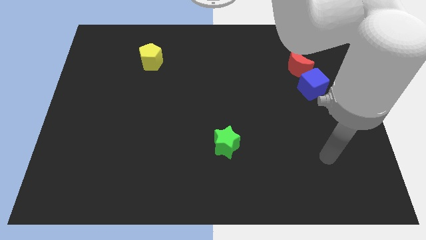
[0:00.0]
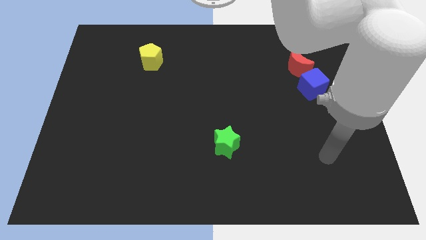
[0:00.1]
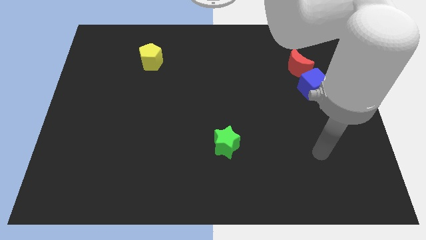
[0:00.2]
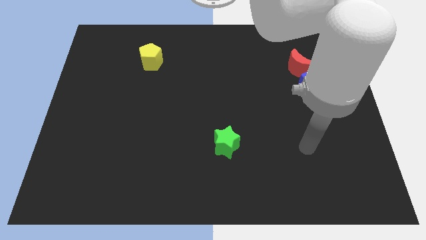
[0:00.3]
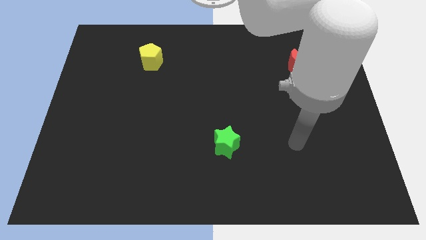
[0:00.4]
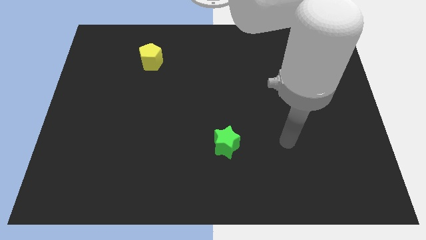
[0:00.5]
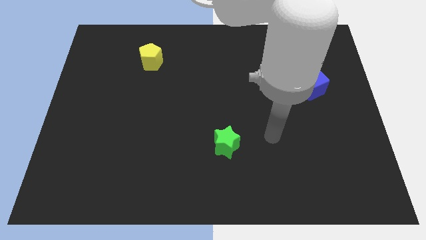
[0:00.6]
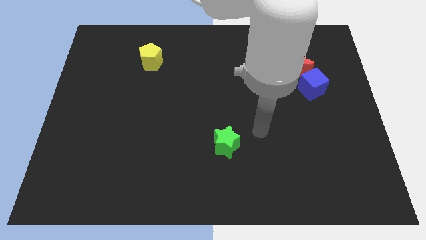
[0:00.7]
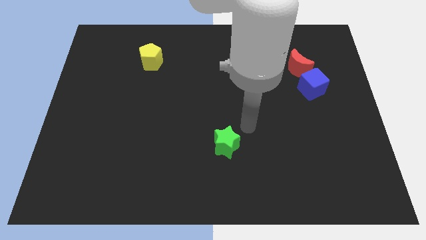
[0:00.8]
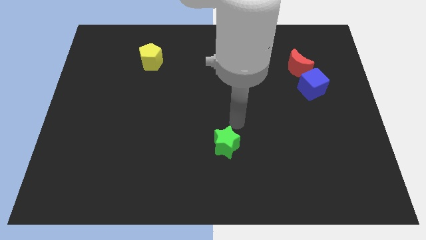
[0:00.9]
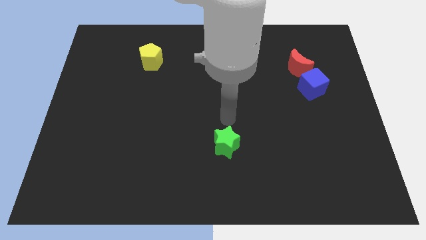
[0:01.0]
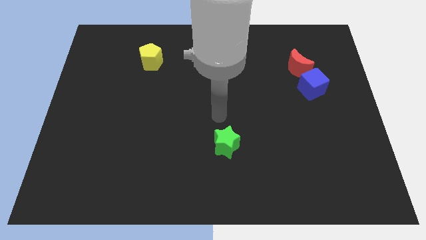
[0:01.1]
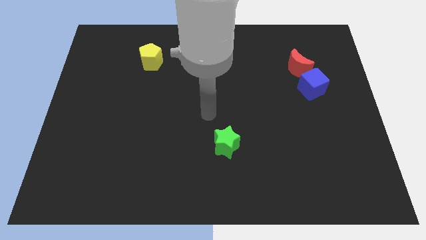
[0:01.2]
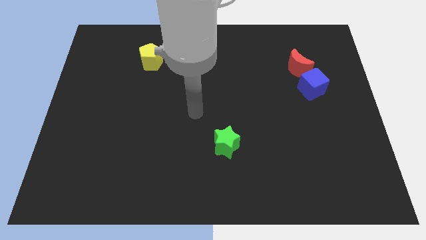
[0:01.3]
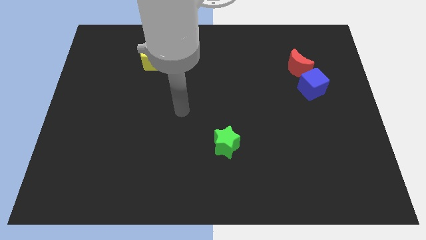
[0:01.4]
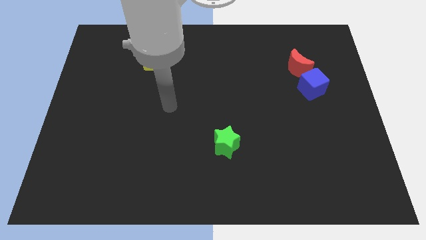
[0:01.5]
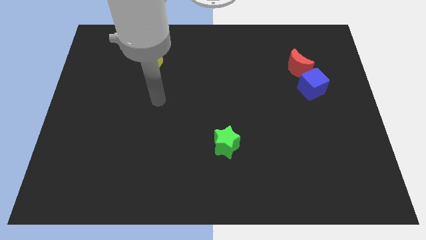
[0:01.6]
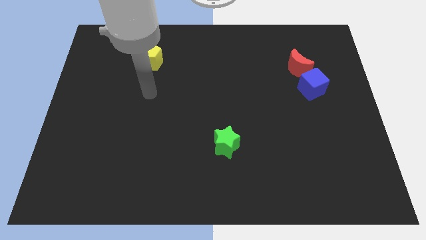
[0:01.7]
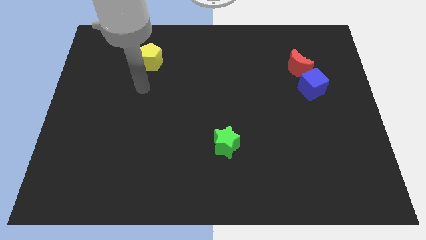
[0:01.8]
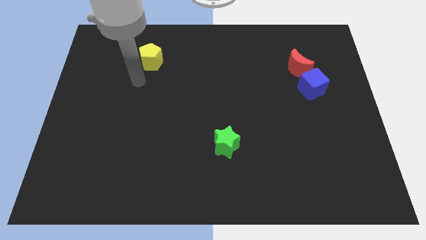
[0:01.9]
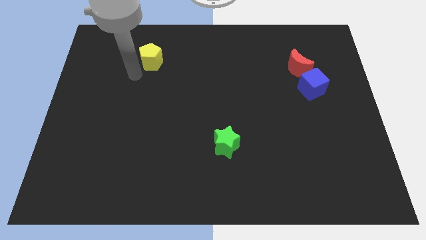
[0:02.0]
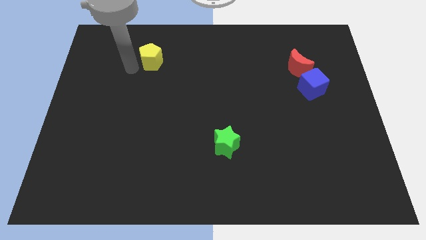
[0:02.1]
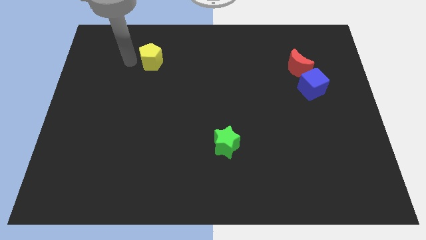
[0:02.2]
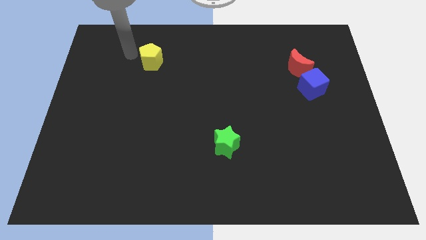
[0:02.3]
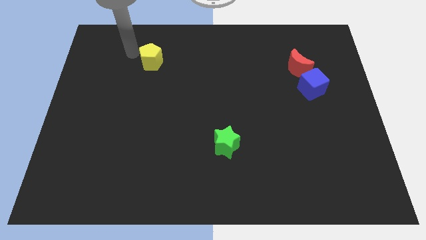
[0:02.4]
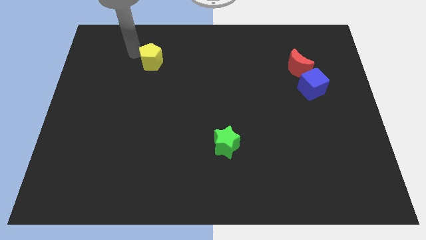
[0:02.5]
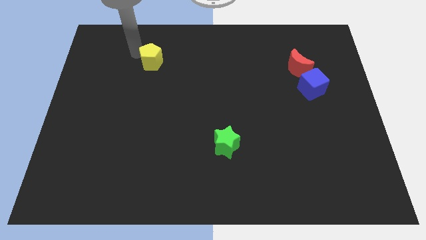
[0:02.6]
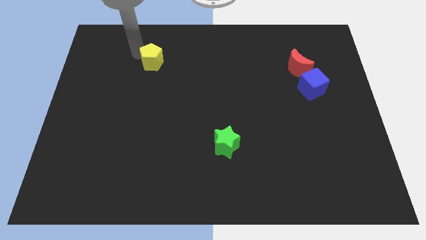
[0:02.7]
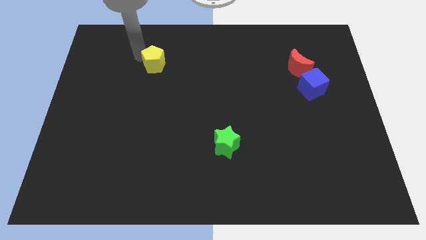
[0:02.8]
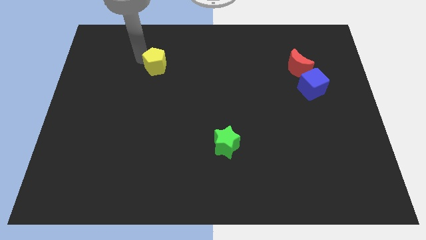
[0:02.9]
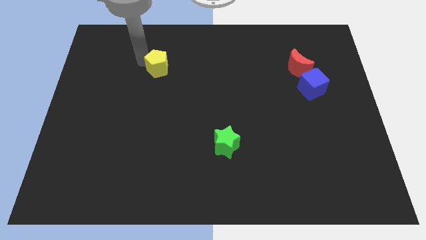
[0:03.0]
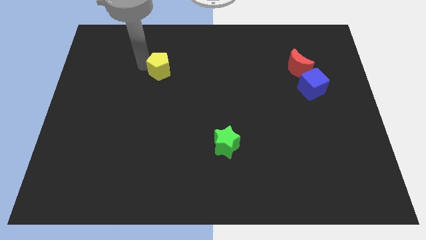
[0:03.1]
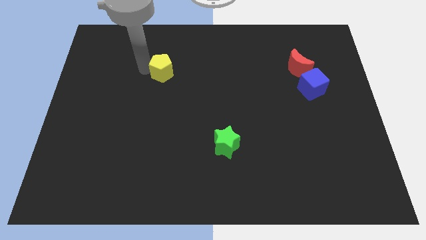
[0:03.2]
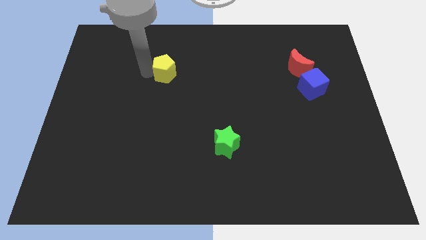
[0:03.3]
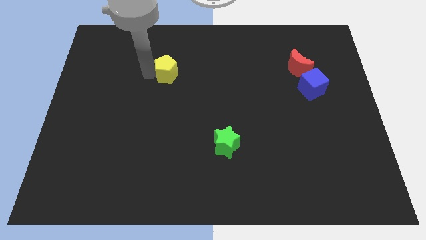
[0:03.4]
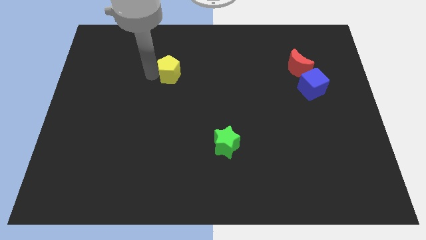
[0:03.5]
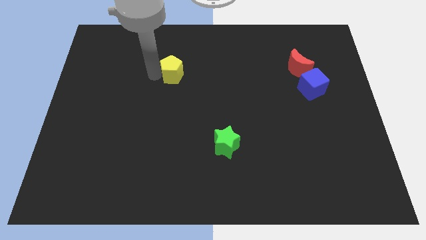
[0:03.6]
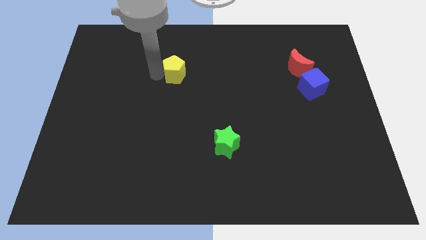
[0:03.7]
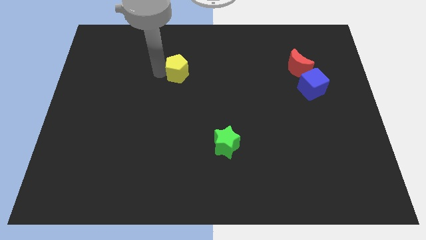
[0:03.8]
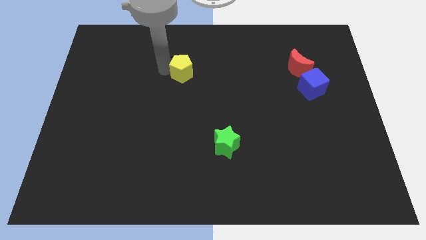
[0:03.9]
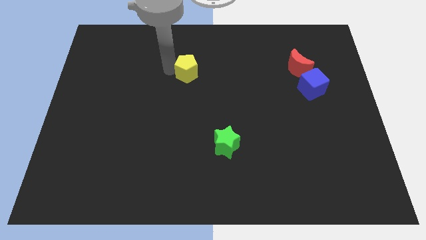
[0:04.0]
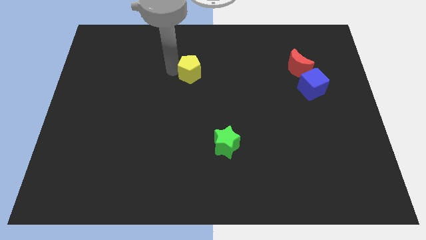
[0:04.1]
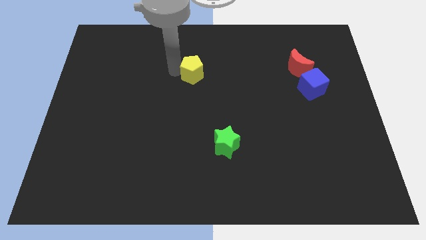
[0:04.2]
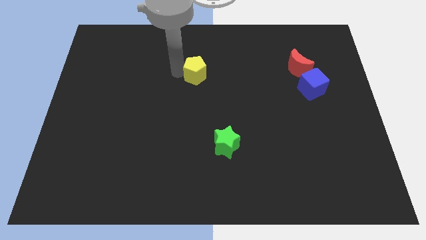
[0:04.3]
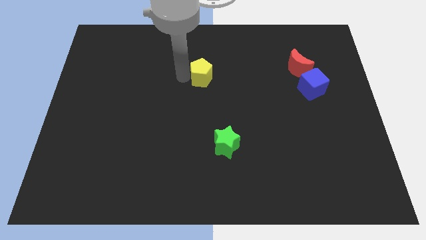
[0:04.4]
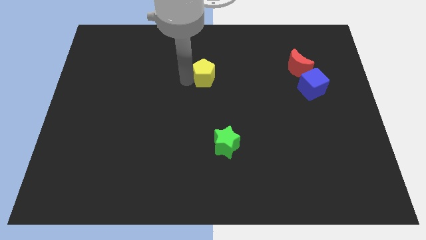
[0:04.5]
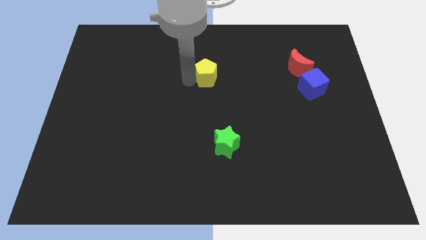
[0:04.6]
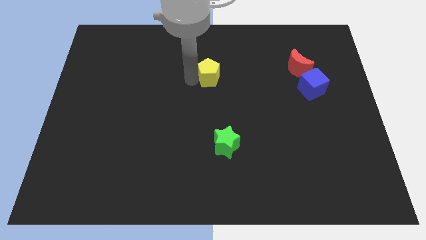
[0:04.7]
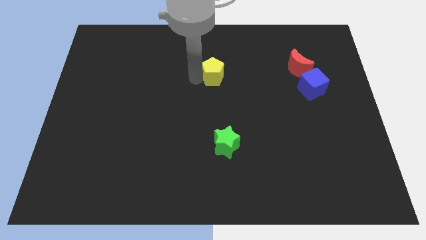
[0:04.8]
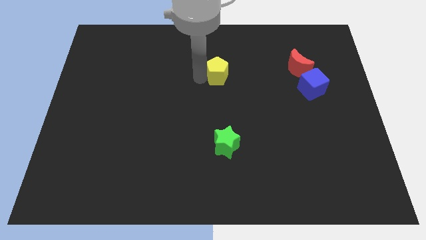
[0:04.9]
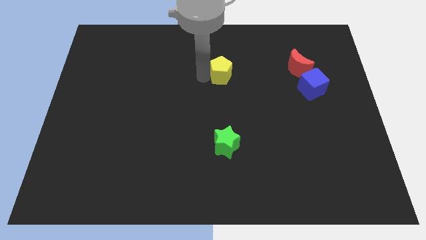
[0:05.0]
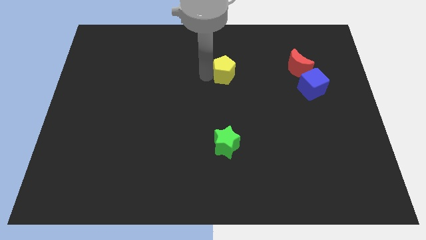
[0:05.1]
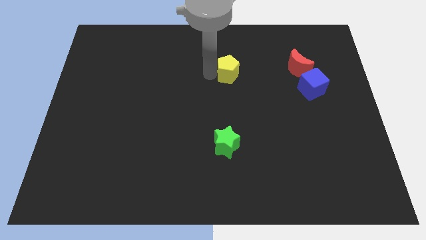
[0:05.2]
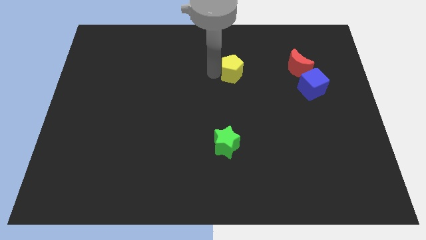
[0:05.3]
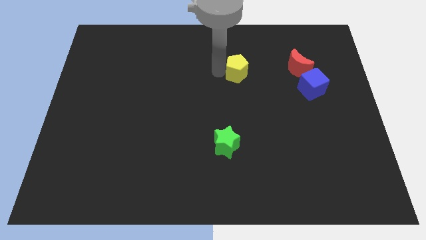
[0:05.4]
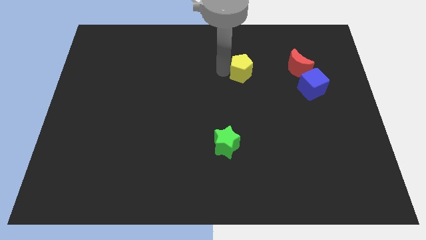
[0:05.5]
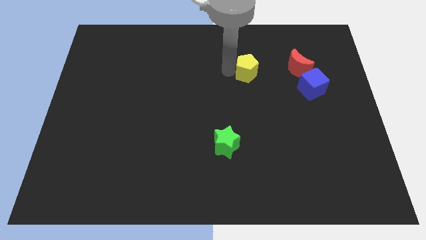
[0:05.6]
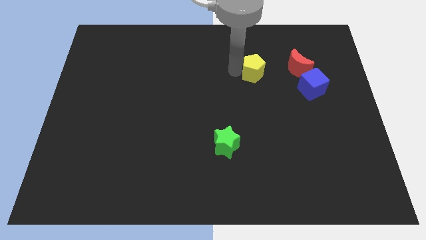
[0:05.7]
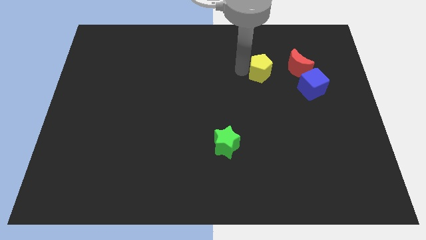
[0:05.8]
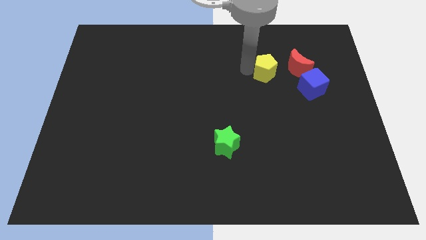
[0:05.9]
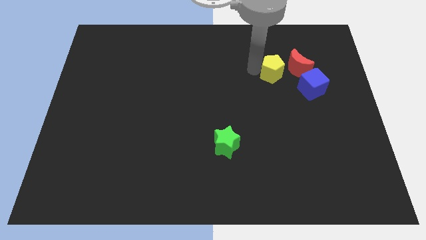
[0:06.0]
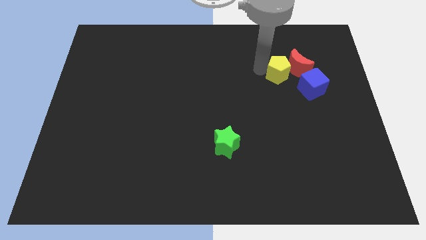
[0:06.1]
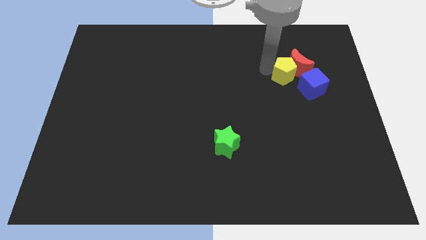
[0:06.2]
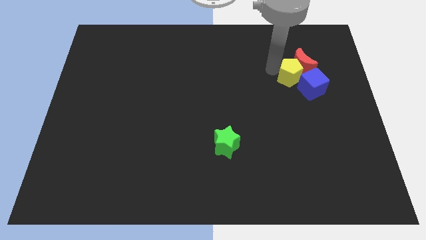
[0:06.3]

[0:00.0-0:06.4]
put the yellow block close to the red moon

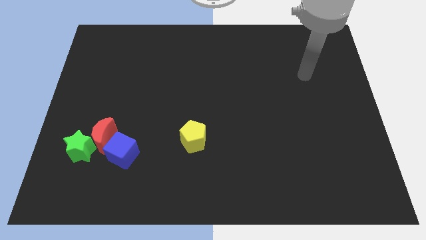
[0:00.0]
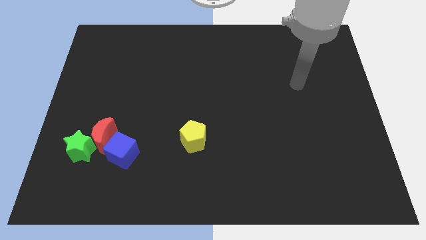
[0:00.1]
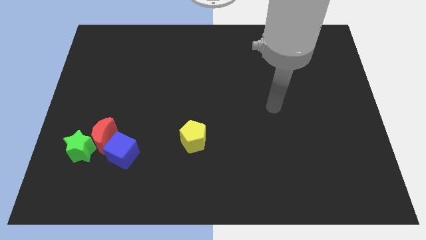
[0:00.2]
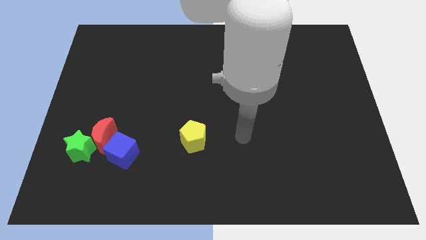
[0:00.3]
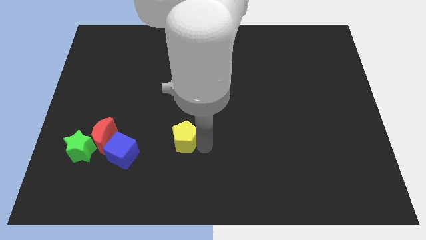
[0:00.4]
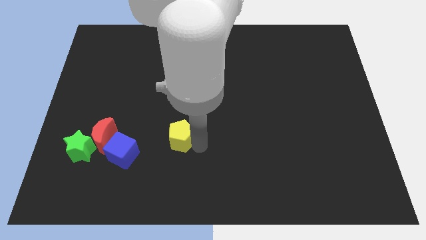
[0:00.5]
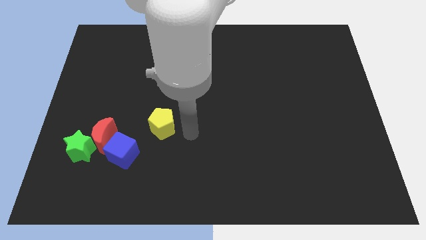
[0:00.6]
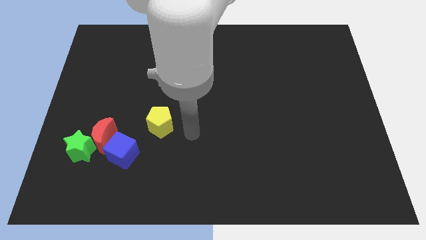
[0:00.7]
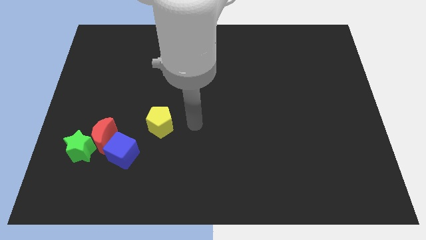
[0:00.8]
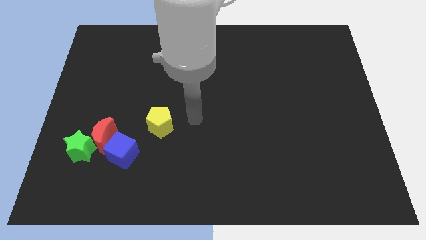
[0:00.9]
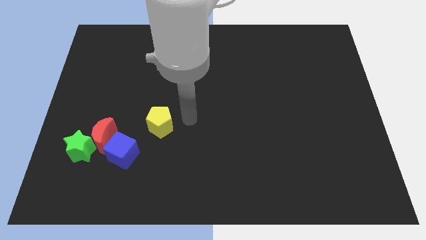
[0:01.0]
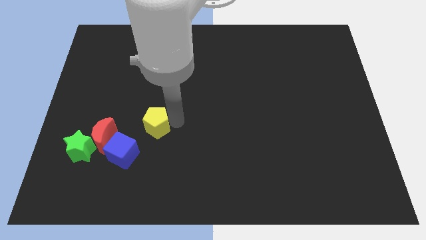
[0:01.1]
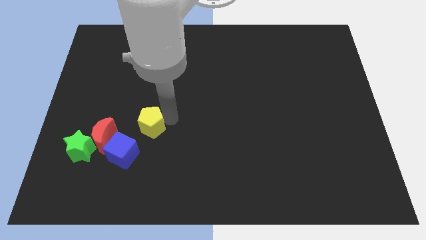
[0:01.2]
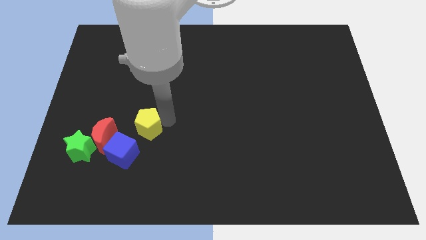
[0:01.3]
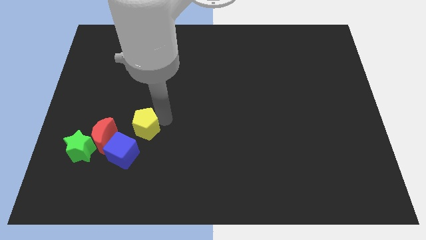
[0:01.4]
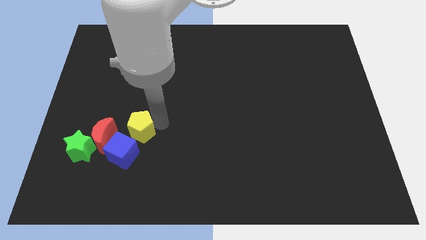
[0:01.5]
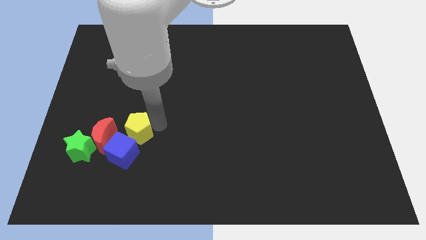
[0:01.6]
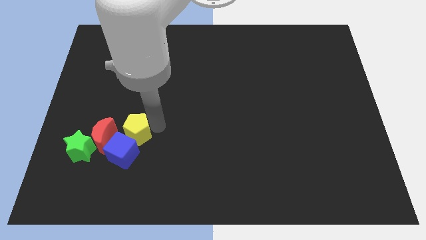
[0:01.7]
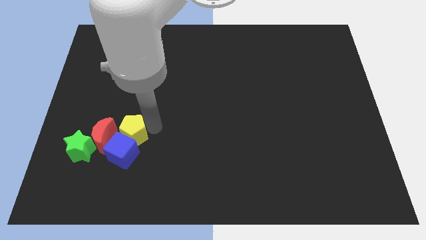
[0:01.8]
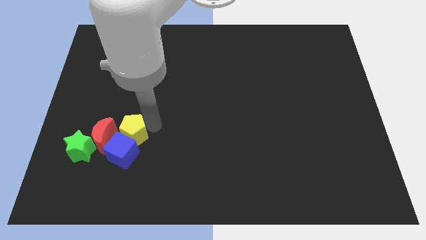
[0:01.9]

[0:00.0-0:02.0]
push the pentagon towards the cube
